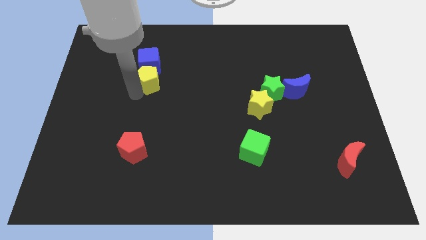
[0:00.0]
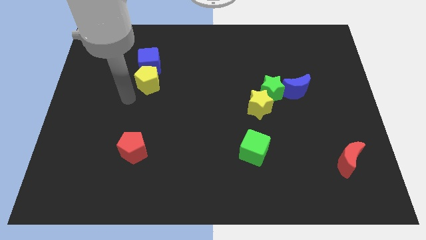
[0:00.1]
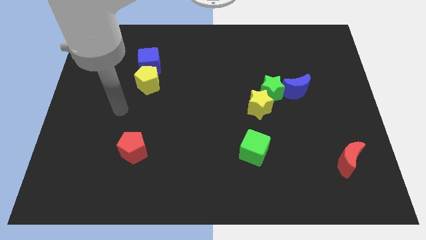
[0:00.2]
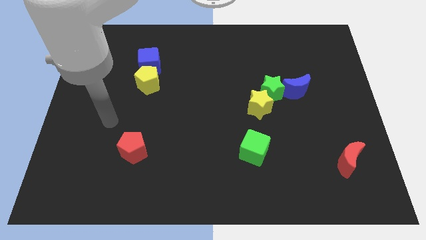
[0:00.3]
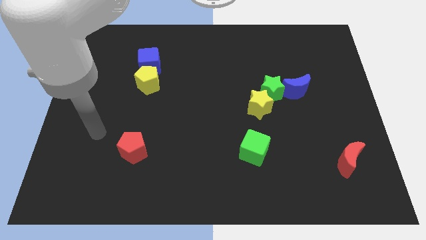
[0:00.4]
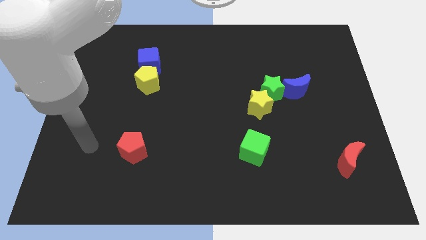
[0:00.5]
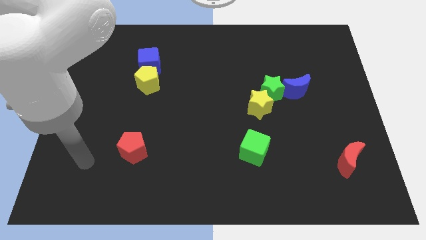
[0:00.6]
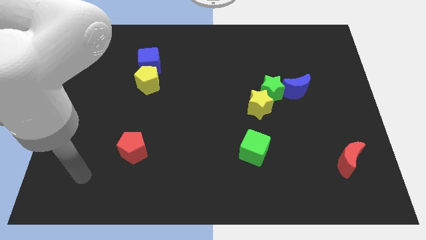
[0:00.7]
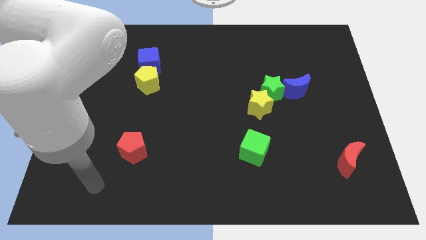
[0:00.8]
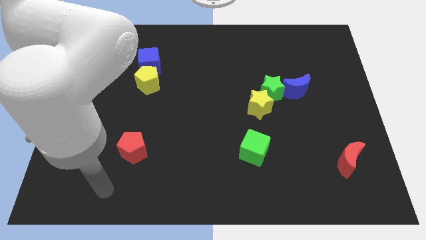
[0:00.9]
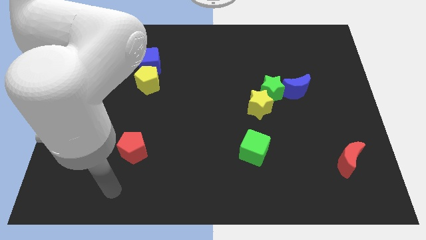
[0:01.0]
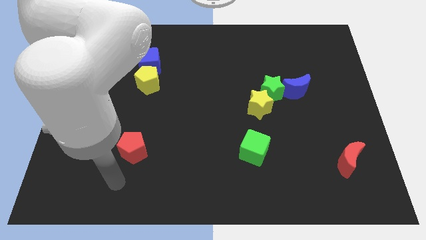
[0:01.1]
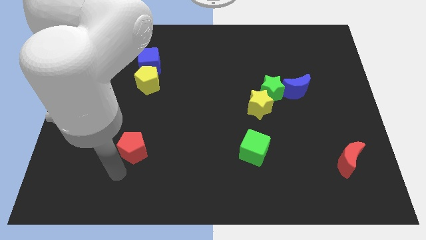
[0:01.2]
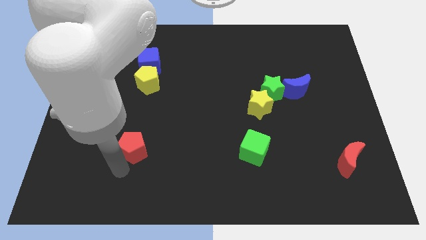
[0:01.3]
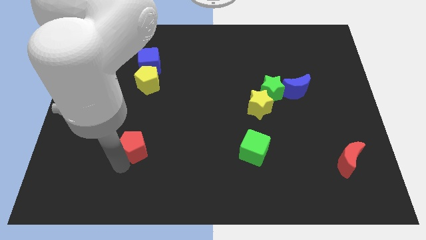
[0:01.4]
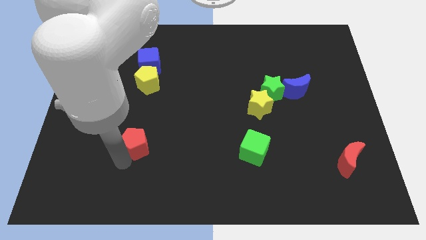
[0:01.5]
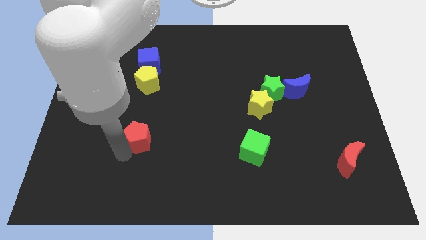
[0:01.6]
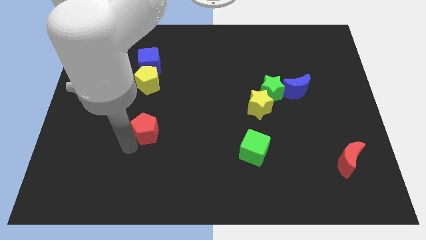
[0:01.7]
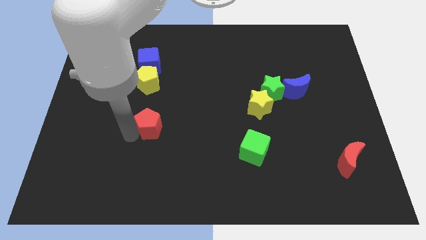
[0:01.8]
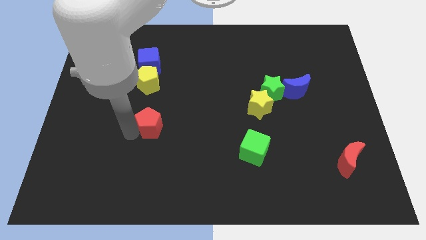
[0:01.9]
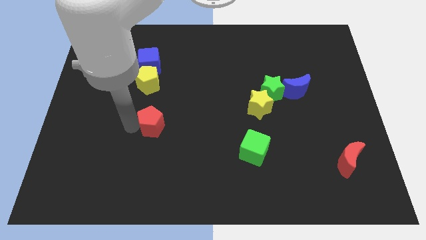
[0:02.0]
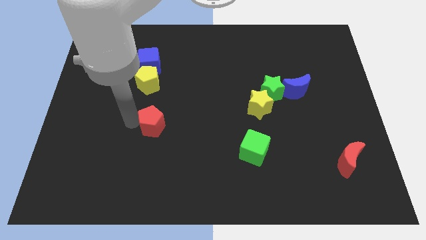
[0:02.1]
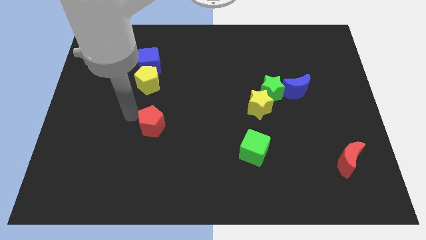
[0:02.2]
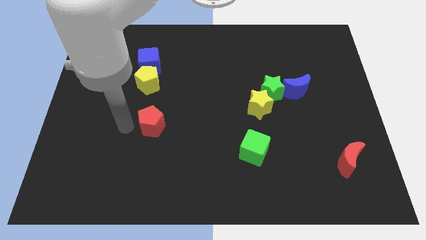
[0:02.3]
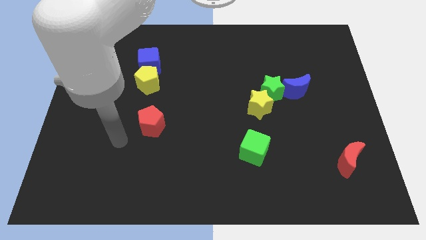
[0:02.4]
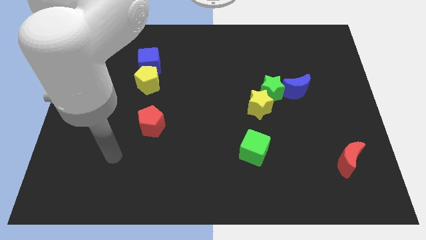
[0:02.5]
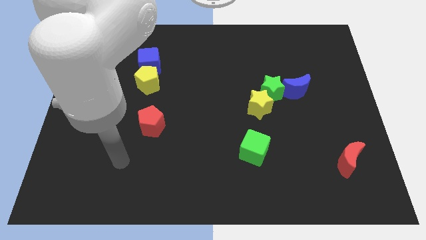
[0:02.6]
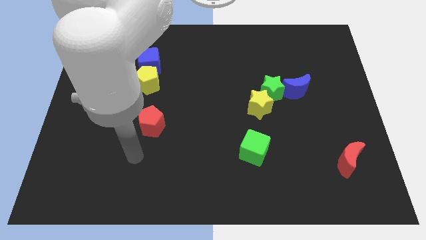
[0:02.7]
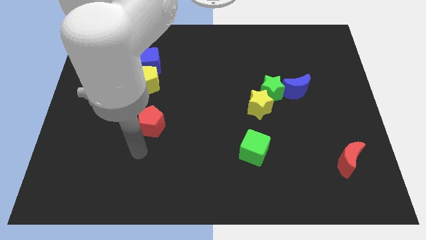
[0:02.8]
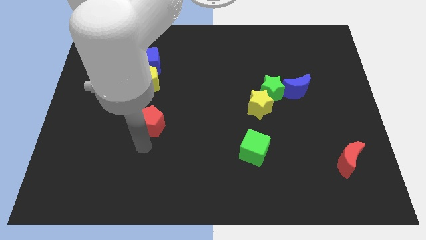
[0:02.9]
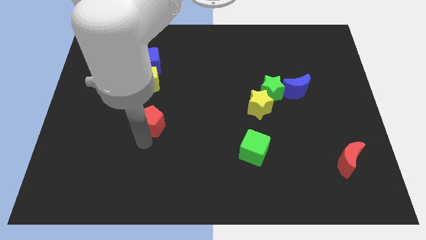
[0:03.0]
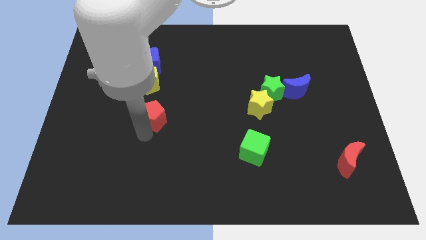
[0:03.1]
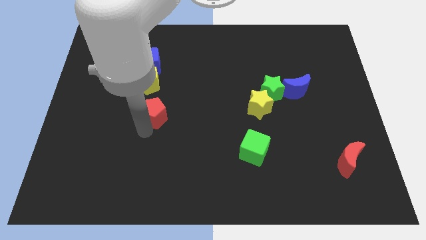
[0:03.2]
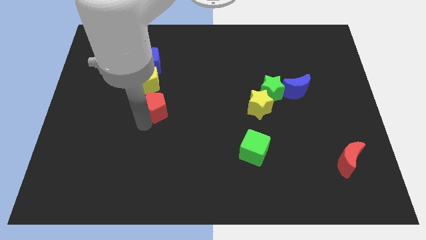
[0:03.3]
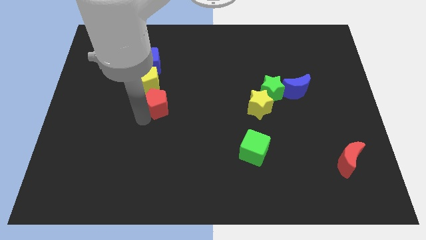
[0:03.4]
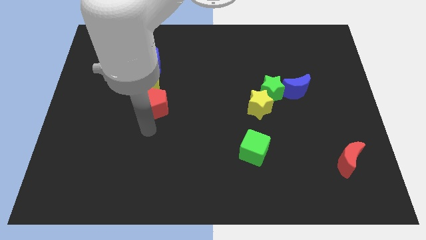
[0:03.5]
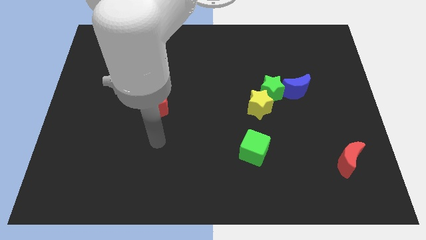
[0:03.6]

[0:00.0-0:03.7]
move the red pentagon to the left of the yellow star

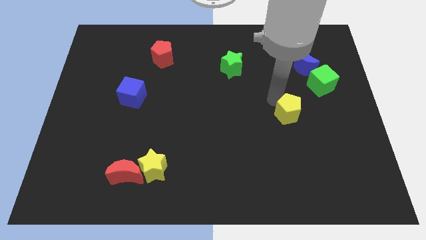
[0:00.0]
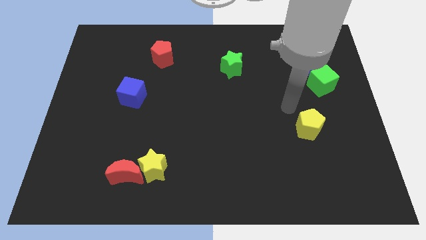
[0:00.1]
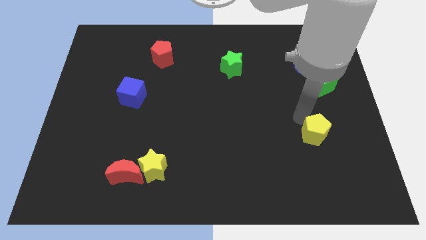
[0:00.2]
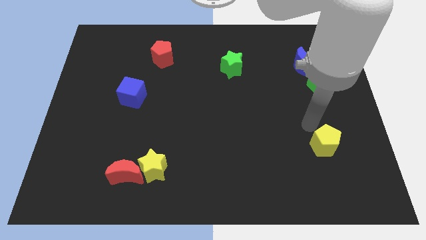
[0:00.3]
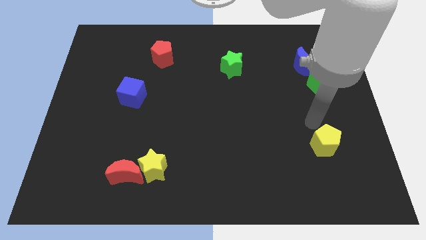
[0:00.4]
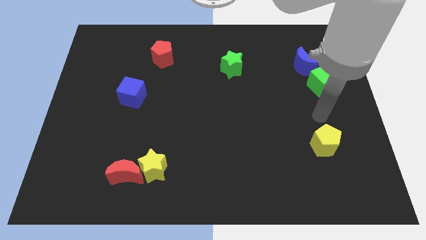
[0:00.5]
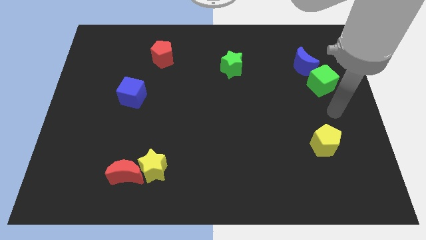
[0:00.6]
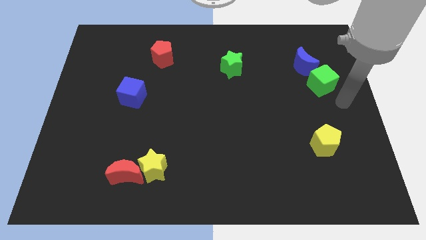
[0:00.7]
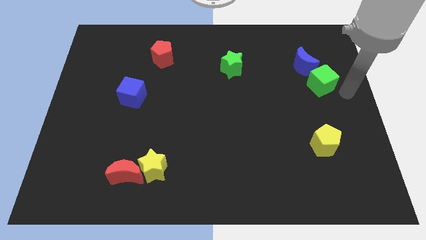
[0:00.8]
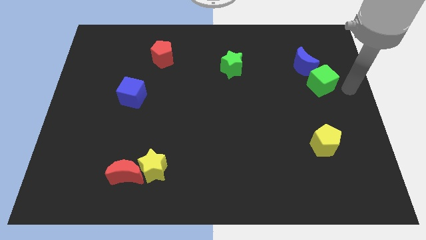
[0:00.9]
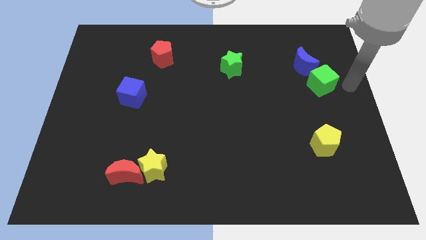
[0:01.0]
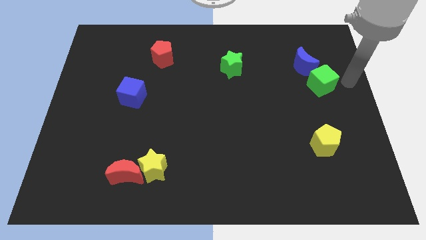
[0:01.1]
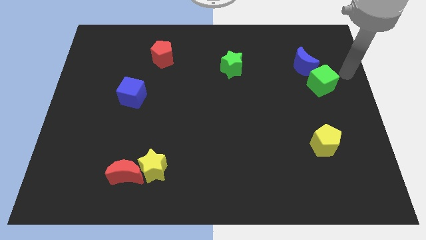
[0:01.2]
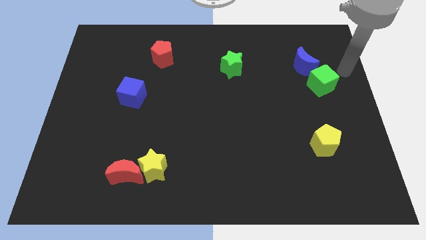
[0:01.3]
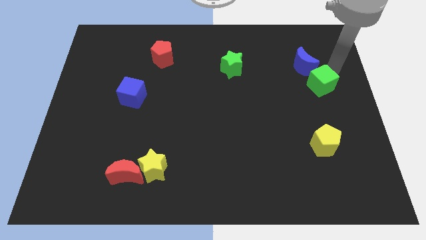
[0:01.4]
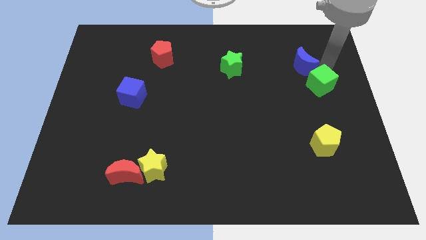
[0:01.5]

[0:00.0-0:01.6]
move your arm away from the yellow pentagon

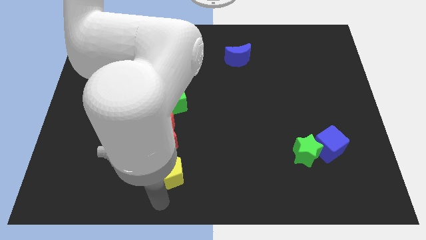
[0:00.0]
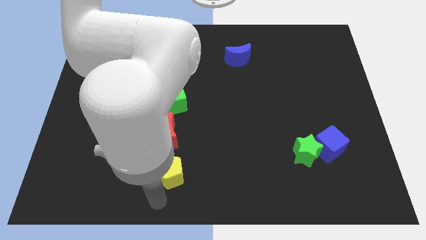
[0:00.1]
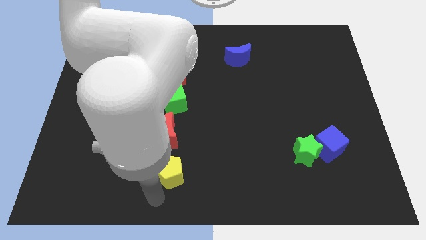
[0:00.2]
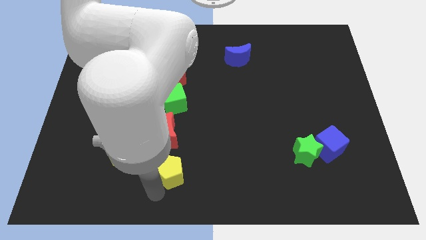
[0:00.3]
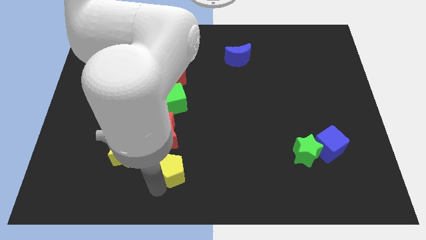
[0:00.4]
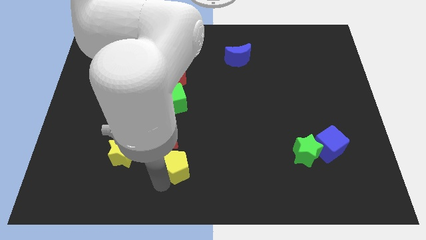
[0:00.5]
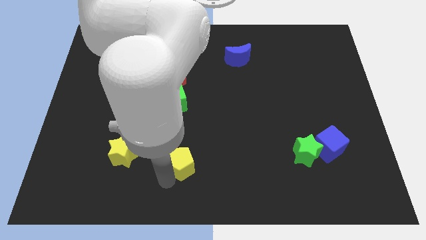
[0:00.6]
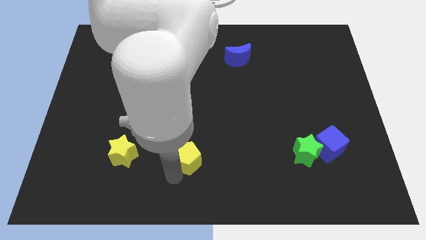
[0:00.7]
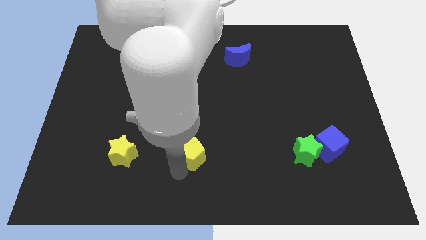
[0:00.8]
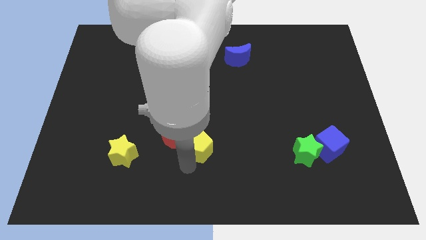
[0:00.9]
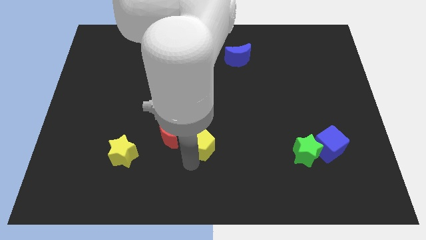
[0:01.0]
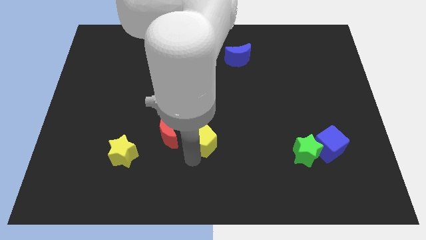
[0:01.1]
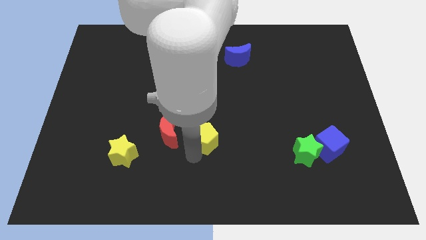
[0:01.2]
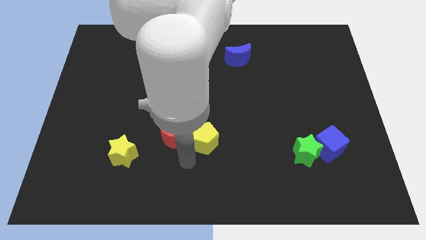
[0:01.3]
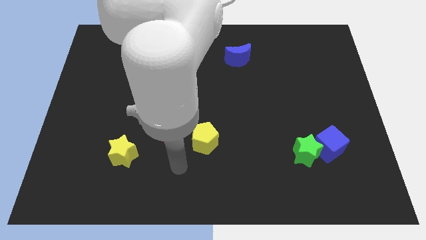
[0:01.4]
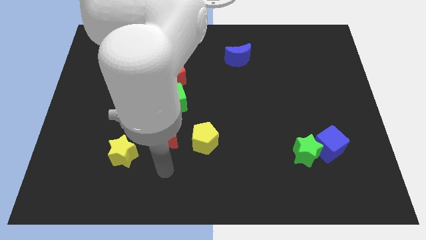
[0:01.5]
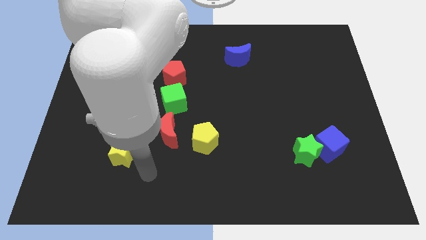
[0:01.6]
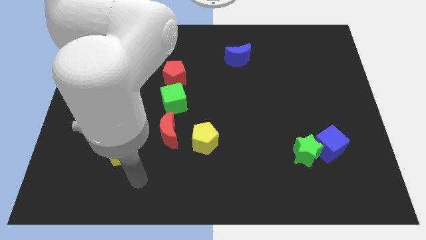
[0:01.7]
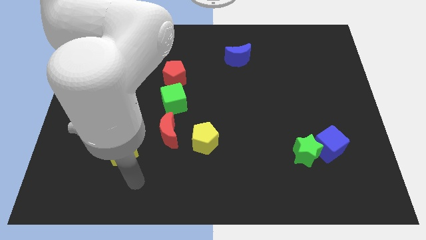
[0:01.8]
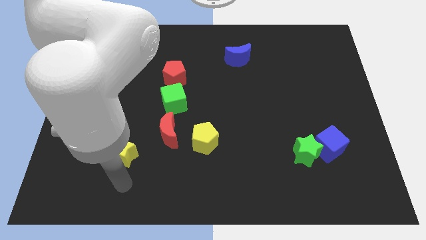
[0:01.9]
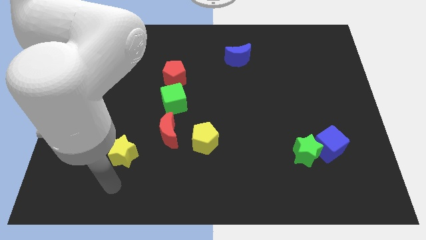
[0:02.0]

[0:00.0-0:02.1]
slide yellow pentagon to the right of red moon

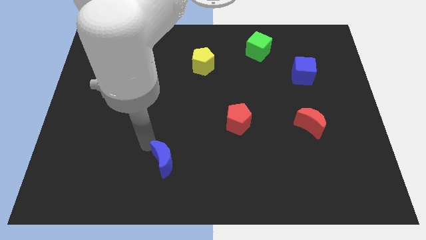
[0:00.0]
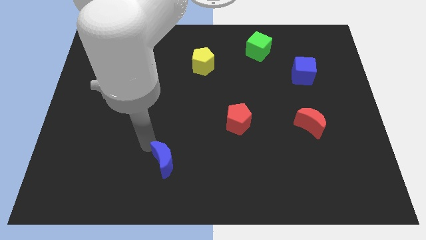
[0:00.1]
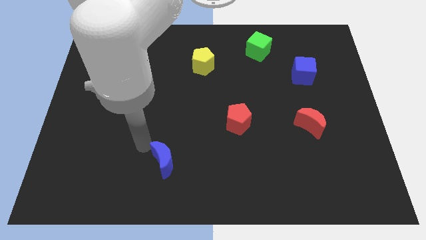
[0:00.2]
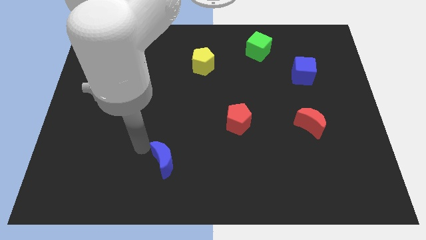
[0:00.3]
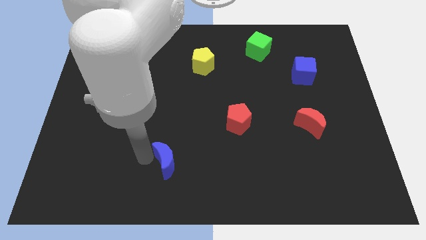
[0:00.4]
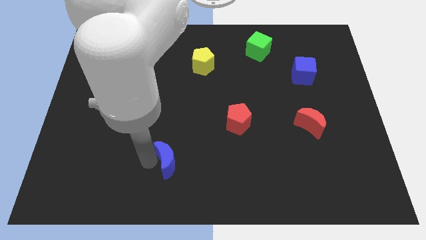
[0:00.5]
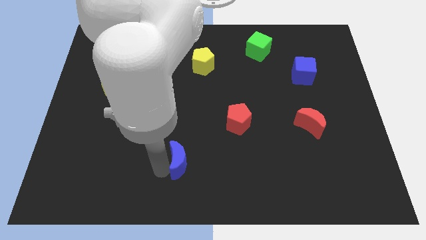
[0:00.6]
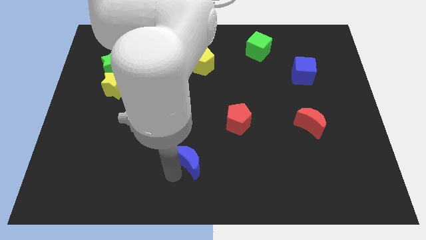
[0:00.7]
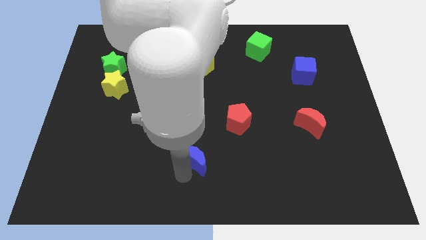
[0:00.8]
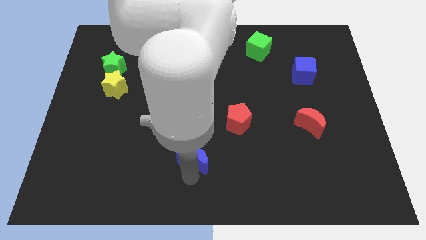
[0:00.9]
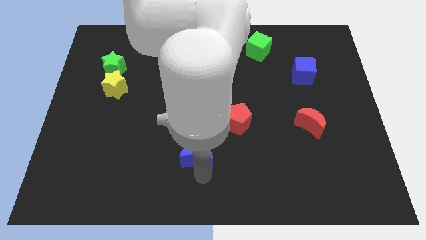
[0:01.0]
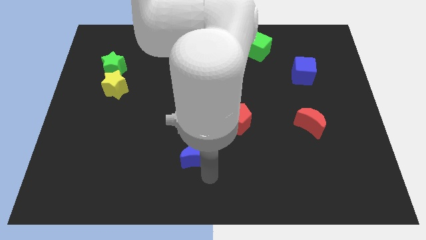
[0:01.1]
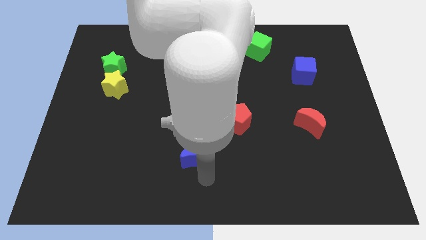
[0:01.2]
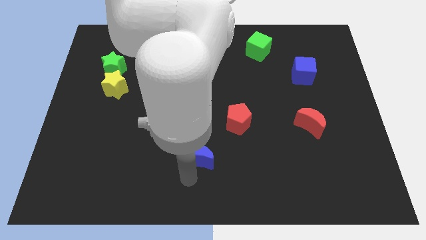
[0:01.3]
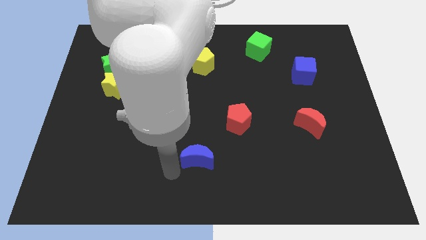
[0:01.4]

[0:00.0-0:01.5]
move the blue moon to the left
